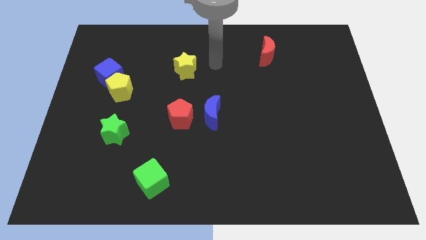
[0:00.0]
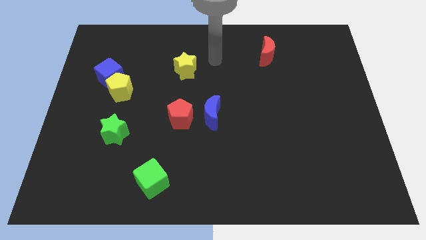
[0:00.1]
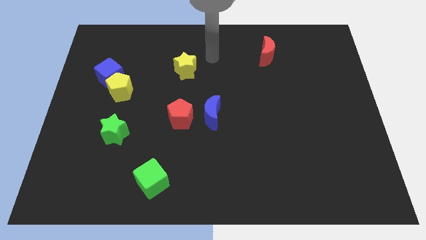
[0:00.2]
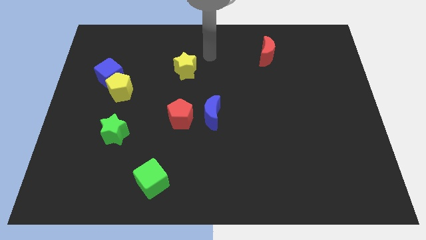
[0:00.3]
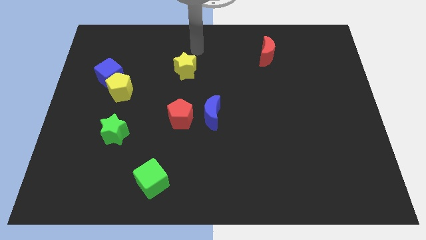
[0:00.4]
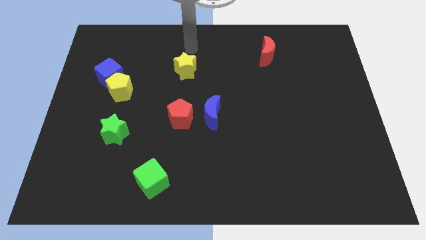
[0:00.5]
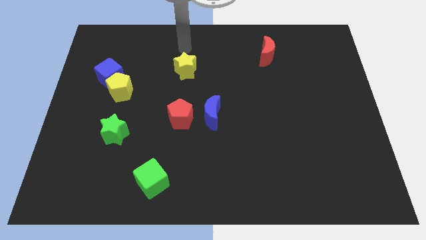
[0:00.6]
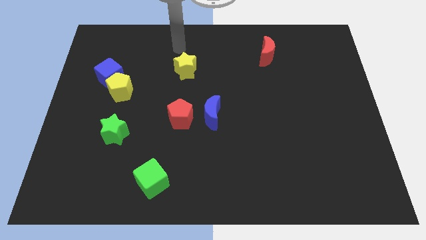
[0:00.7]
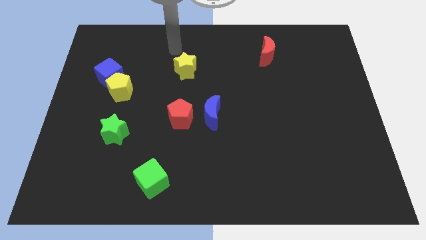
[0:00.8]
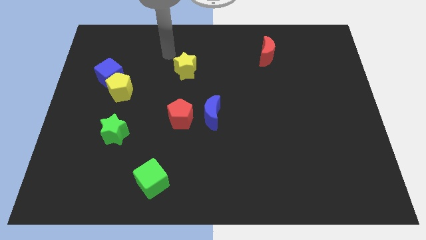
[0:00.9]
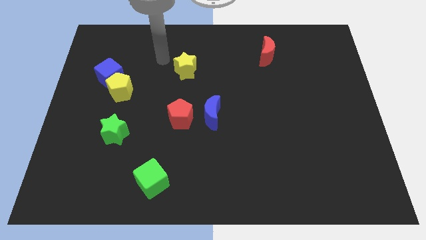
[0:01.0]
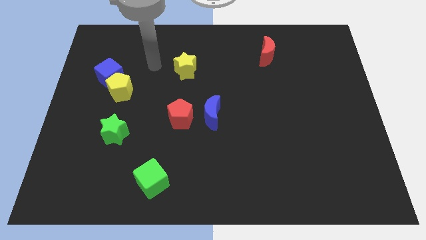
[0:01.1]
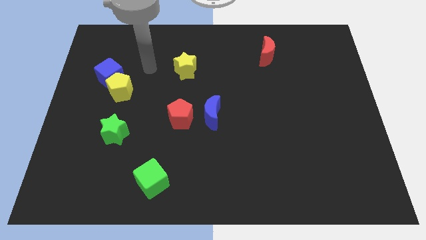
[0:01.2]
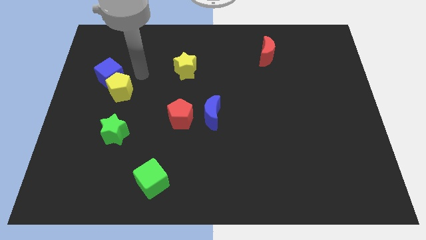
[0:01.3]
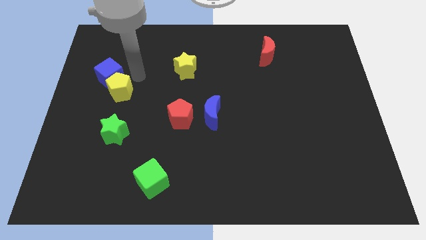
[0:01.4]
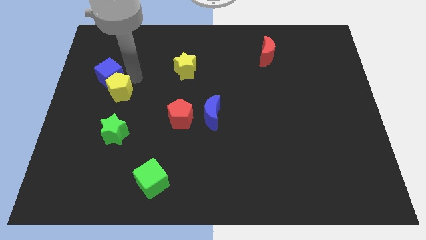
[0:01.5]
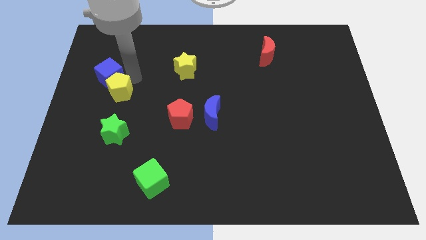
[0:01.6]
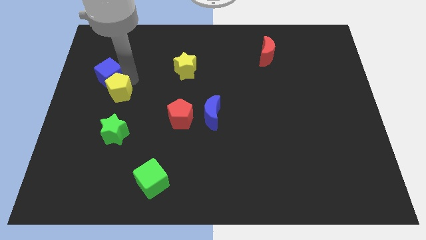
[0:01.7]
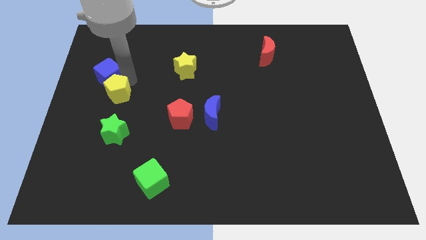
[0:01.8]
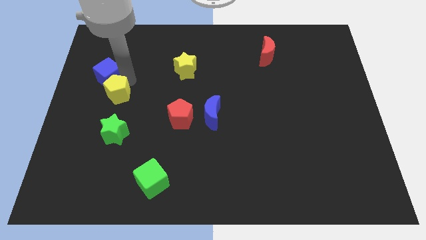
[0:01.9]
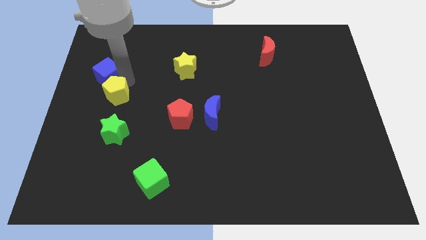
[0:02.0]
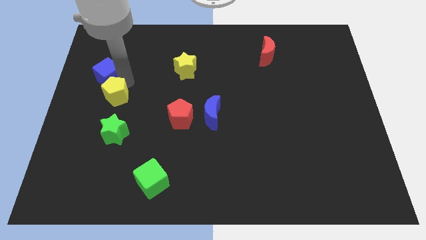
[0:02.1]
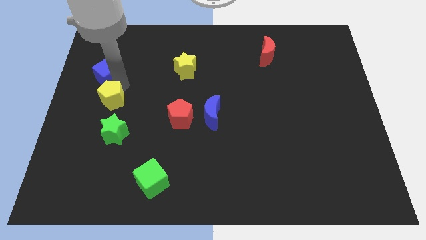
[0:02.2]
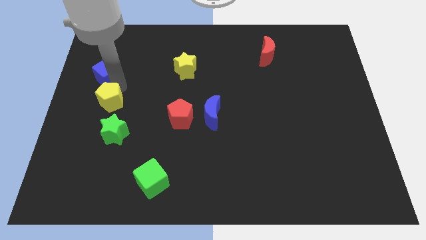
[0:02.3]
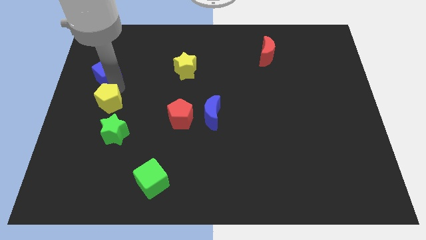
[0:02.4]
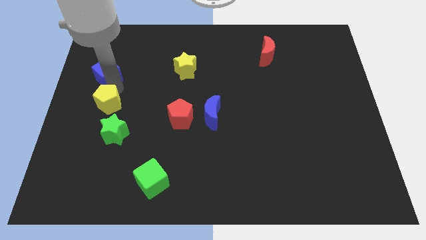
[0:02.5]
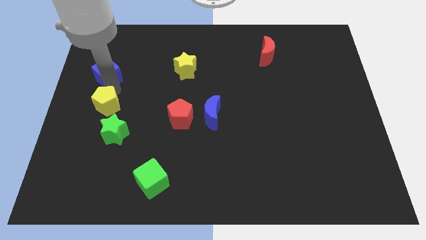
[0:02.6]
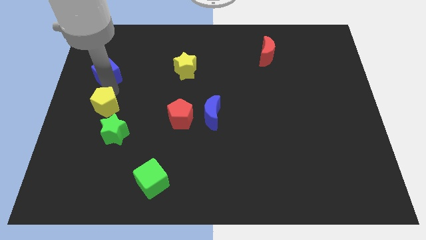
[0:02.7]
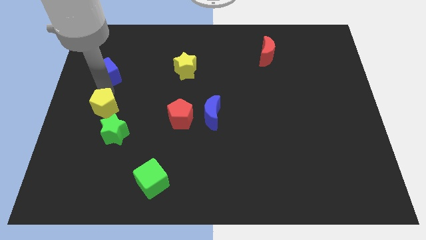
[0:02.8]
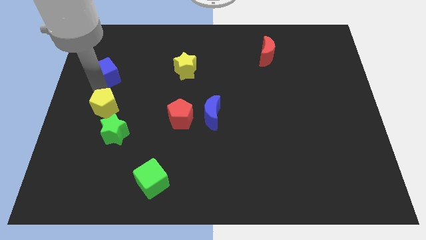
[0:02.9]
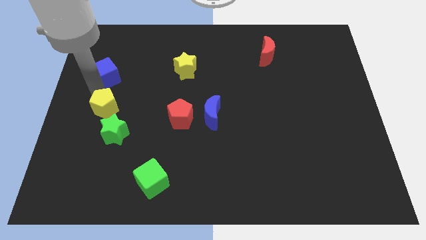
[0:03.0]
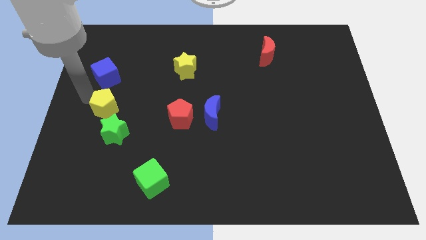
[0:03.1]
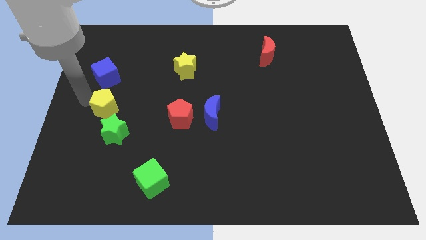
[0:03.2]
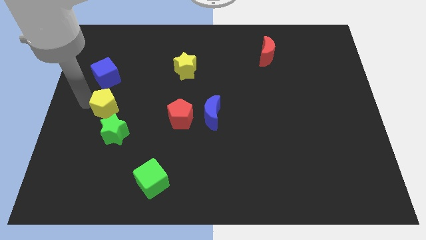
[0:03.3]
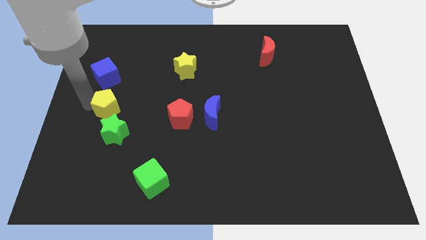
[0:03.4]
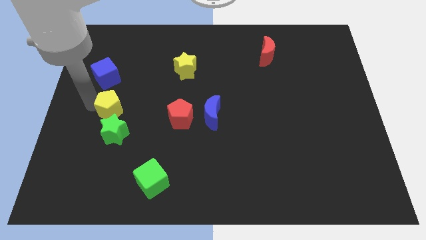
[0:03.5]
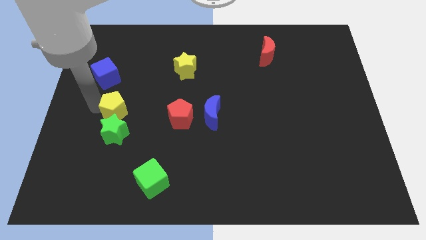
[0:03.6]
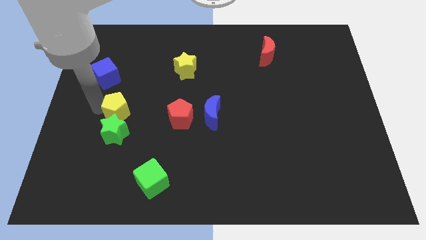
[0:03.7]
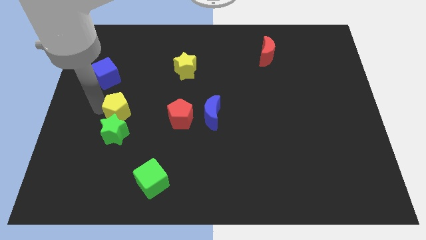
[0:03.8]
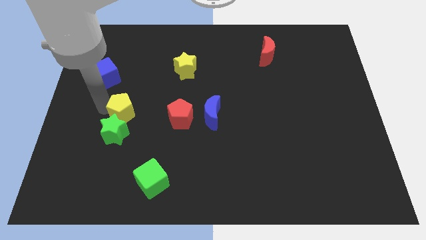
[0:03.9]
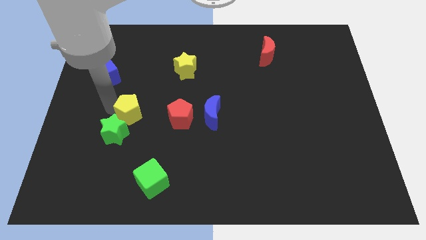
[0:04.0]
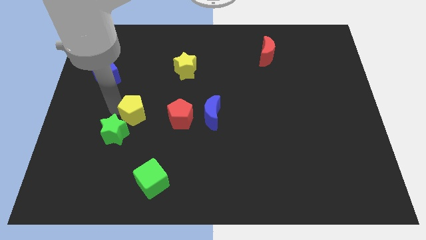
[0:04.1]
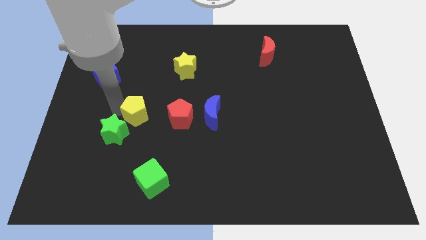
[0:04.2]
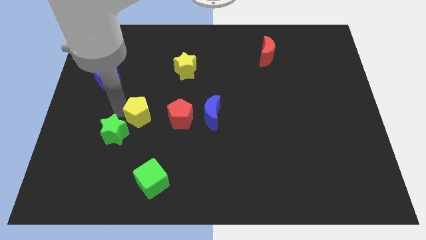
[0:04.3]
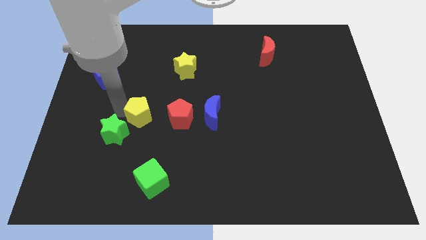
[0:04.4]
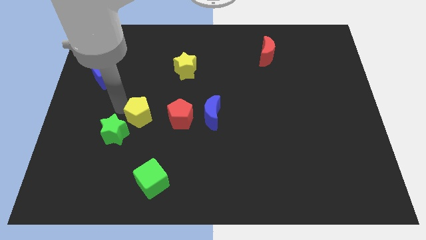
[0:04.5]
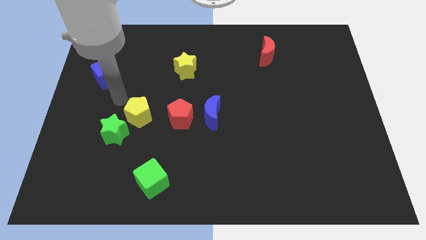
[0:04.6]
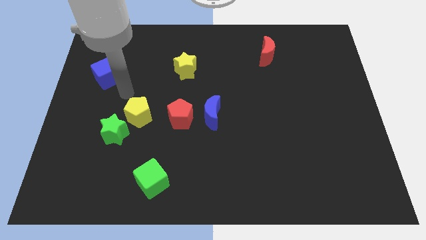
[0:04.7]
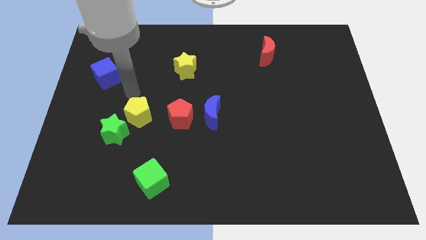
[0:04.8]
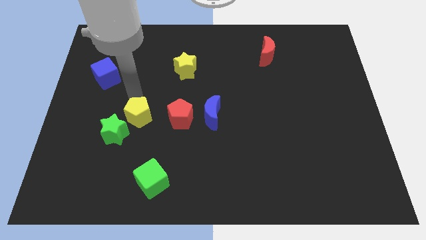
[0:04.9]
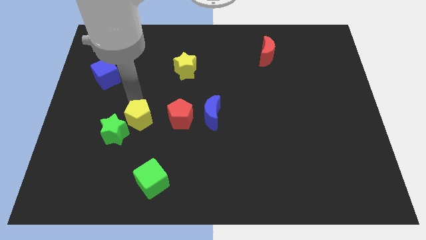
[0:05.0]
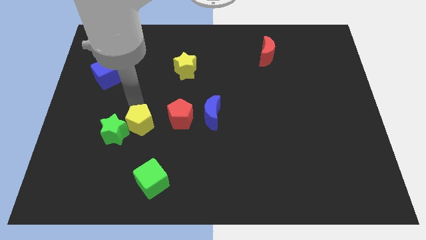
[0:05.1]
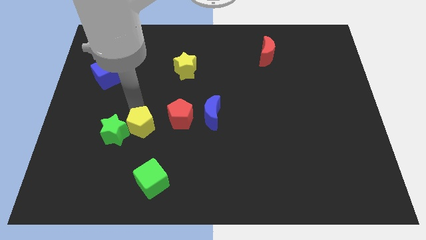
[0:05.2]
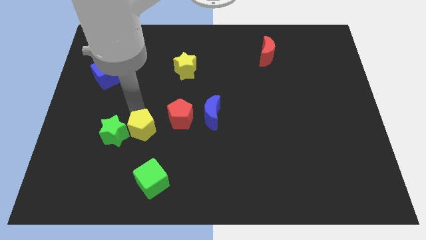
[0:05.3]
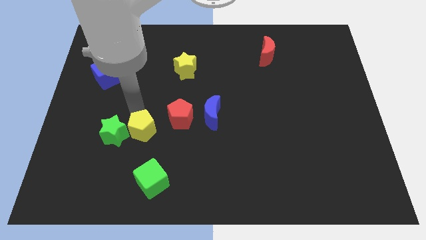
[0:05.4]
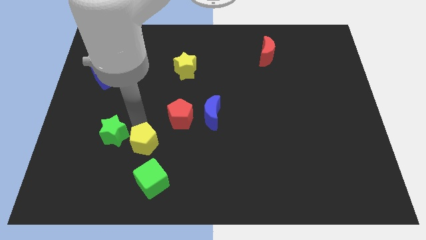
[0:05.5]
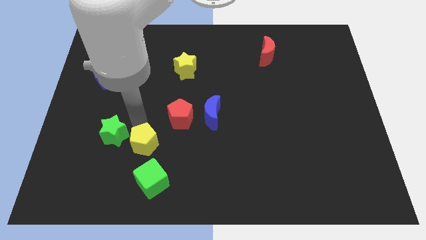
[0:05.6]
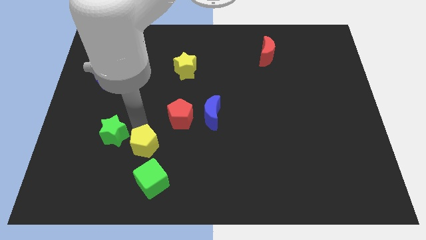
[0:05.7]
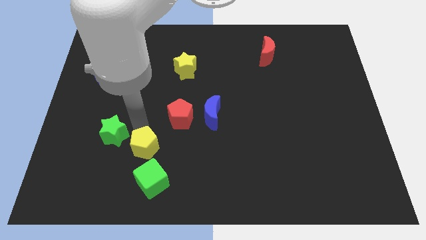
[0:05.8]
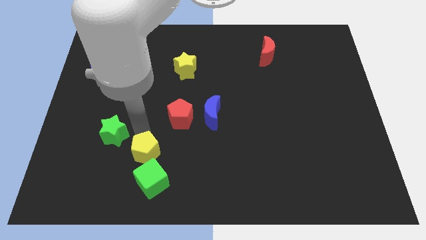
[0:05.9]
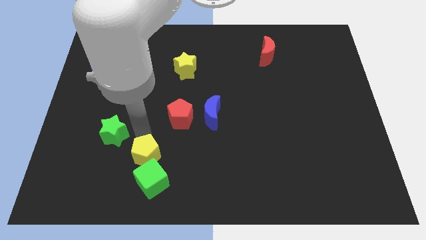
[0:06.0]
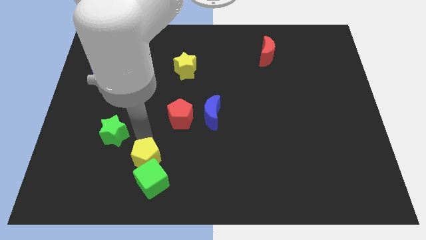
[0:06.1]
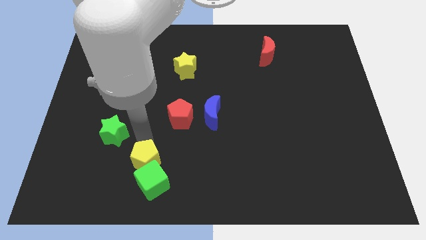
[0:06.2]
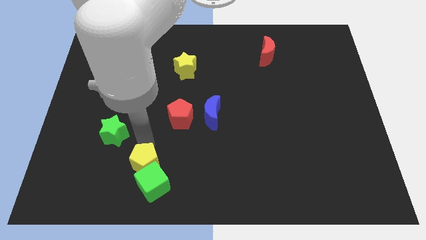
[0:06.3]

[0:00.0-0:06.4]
push the yellow pentagon close to the green cube

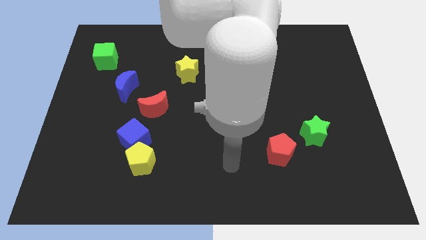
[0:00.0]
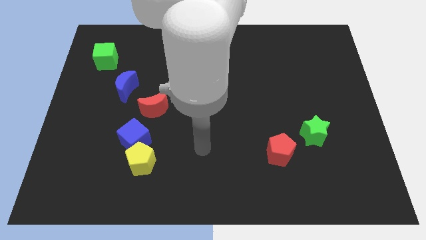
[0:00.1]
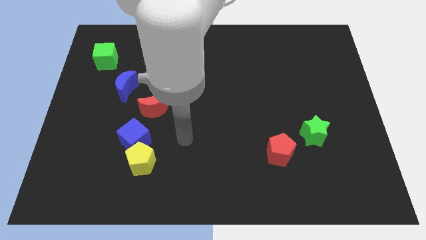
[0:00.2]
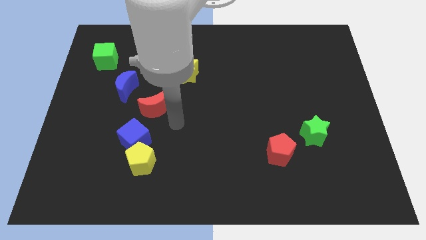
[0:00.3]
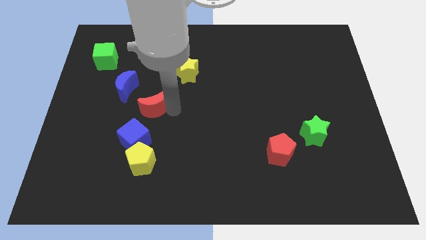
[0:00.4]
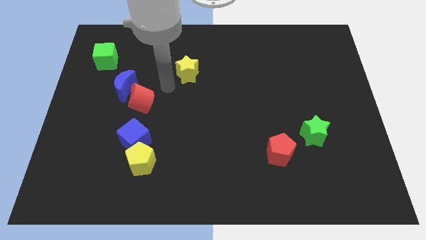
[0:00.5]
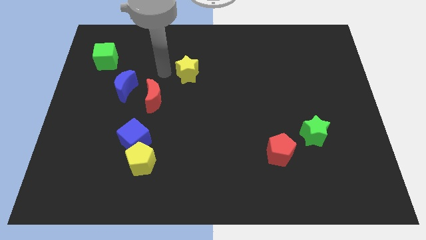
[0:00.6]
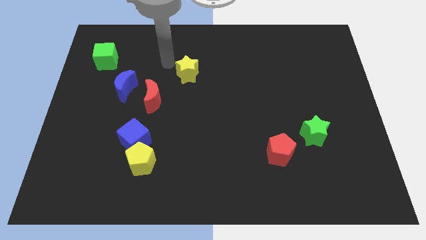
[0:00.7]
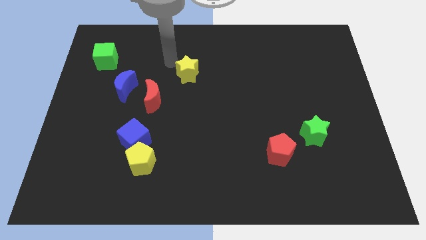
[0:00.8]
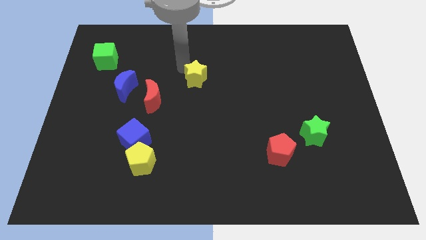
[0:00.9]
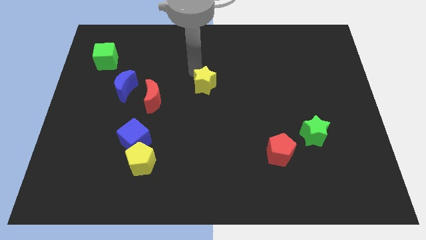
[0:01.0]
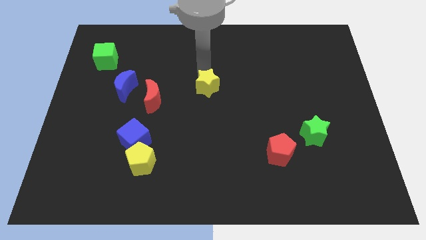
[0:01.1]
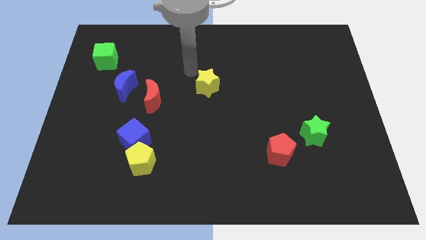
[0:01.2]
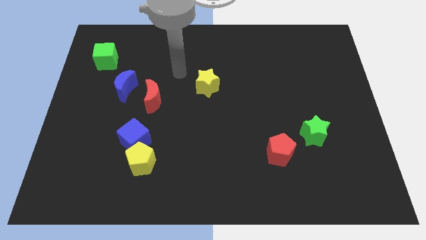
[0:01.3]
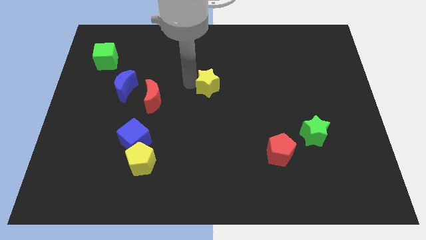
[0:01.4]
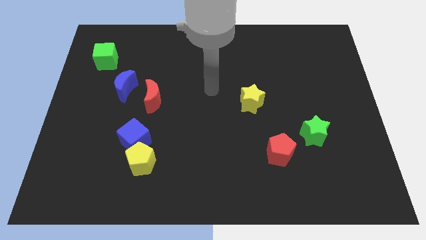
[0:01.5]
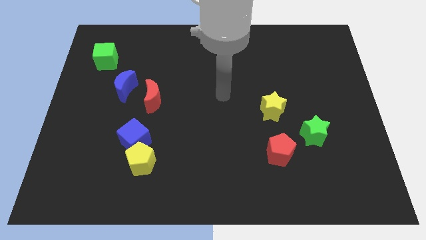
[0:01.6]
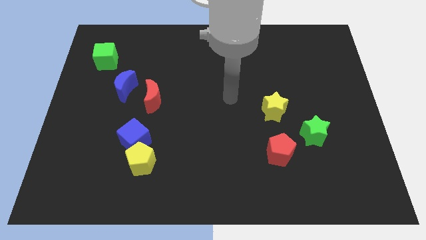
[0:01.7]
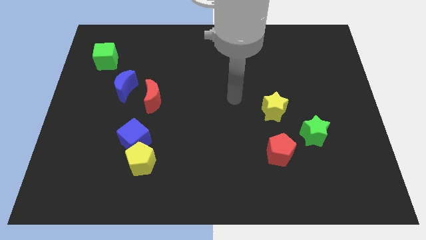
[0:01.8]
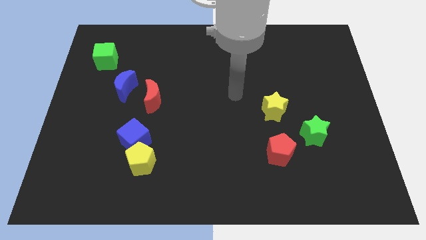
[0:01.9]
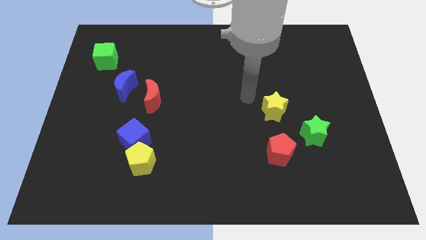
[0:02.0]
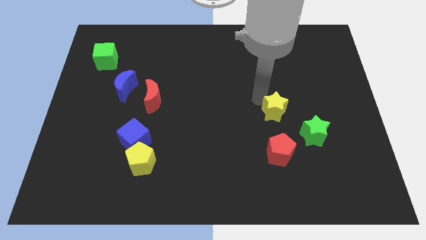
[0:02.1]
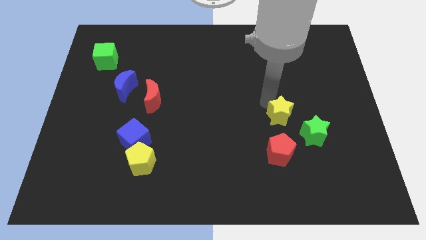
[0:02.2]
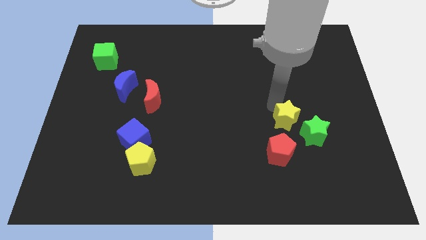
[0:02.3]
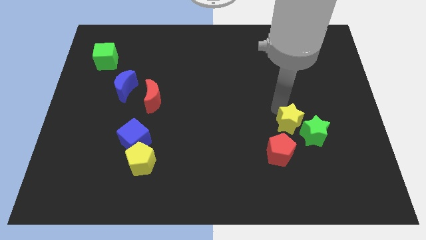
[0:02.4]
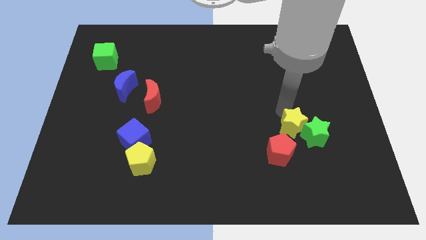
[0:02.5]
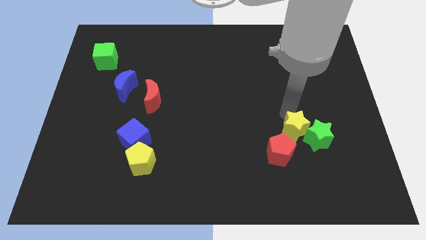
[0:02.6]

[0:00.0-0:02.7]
slide the yellow star to the green star
